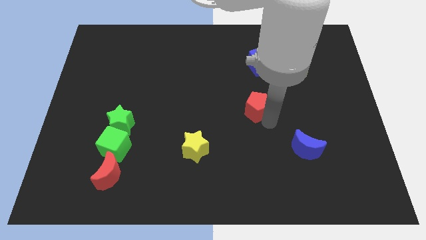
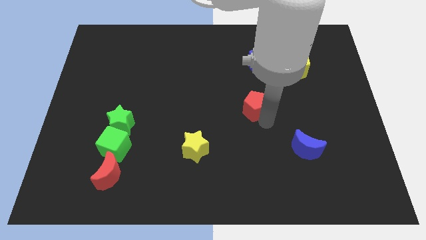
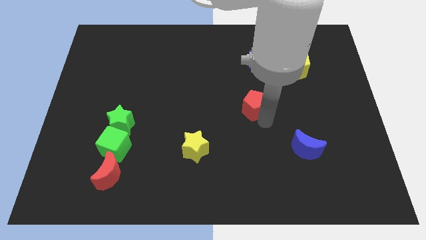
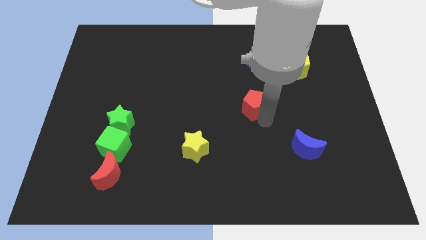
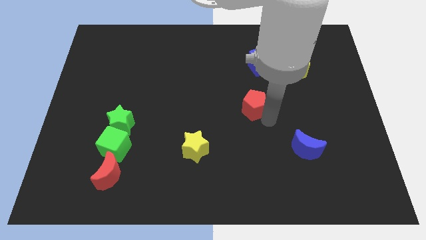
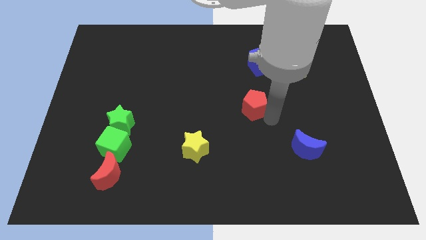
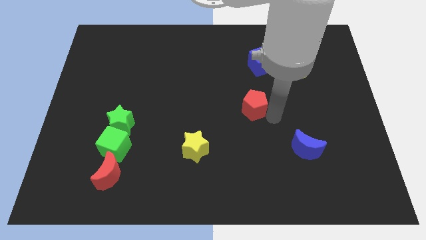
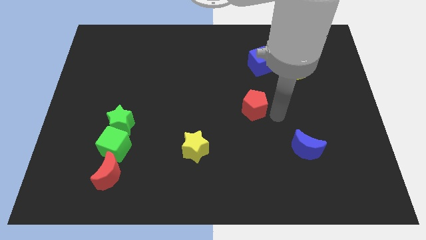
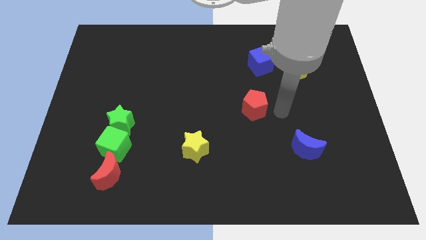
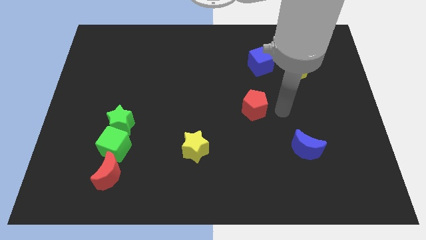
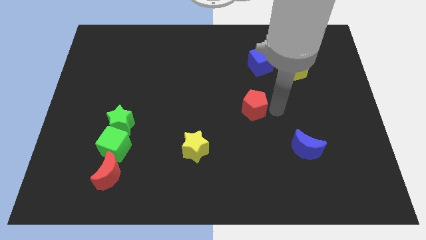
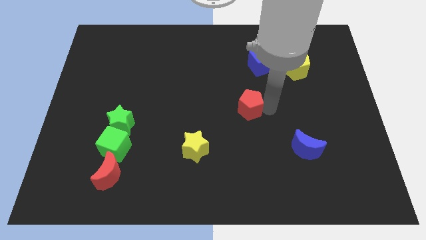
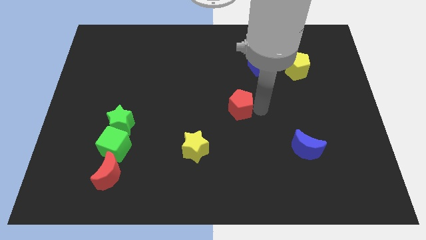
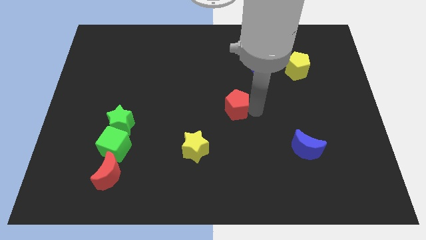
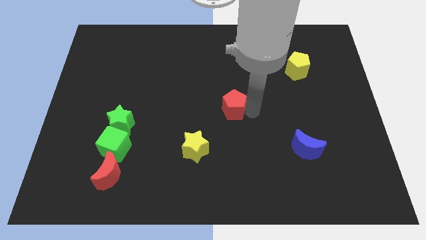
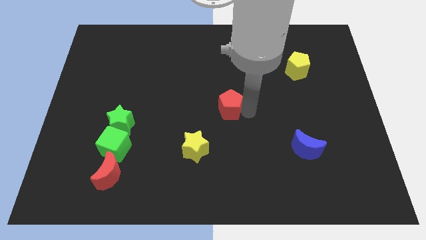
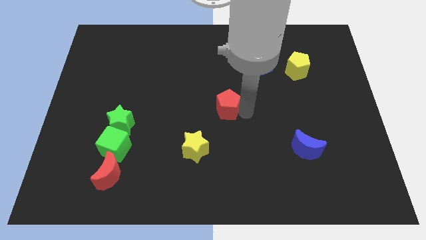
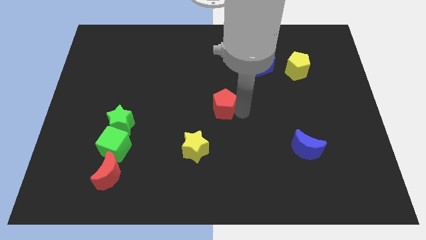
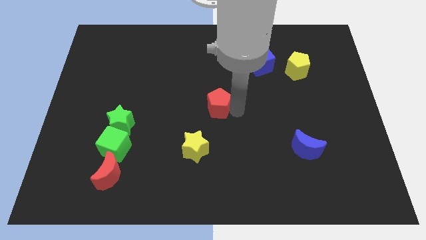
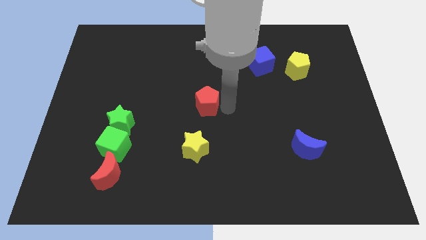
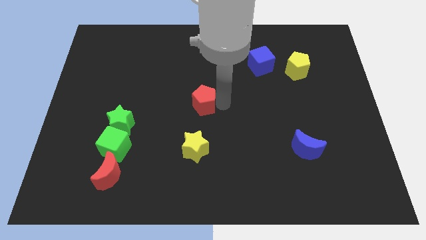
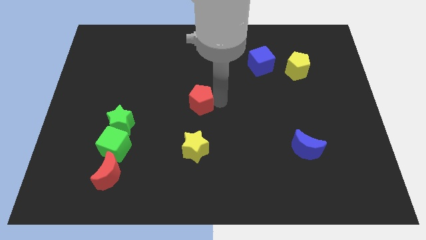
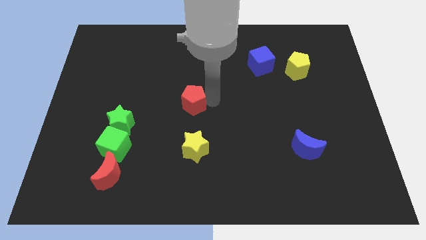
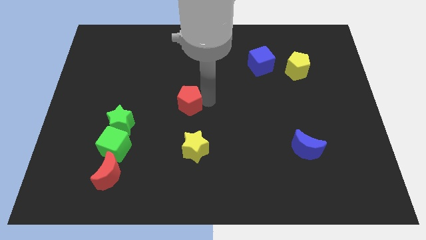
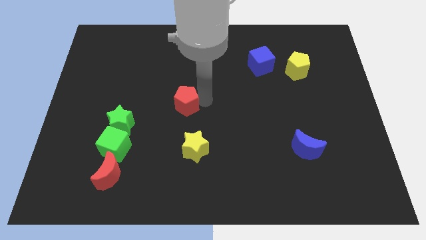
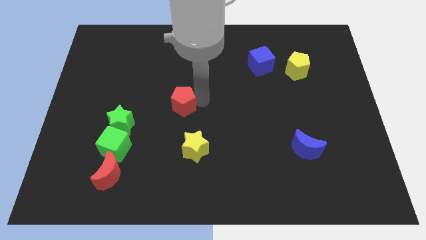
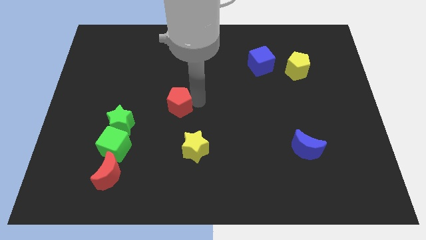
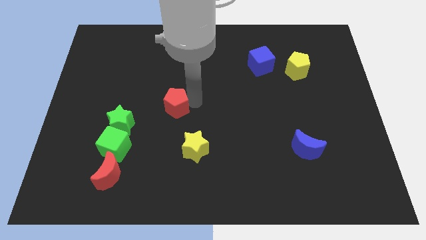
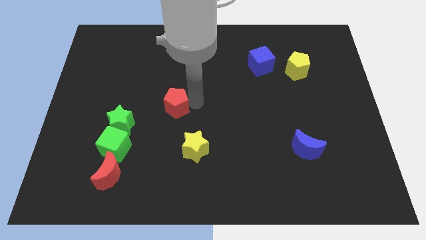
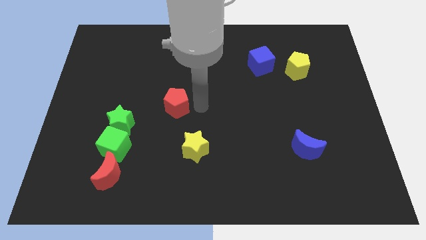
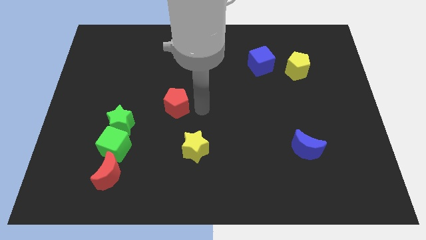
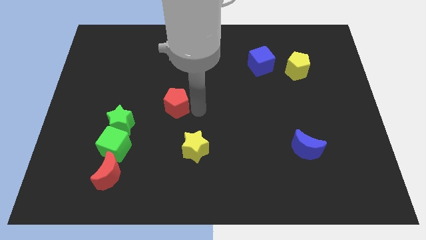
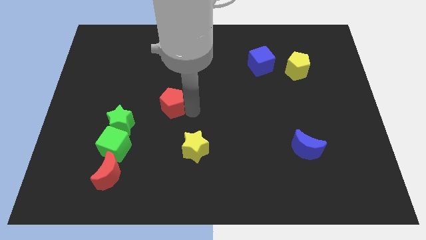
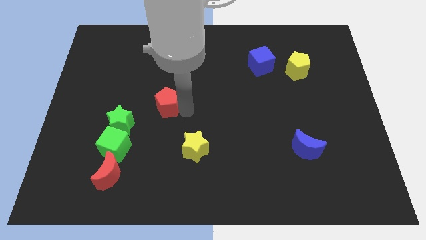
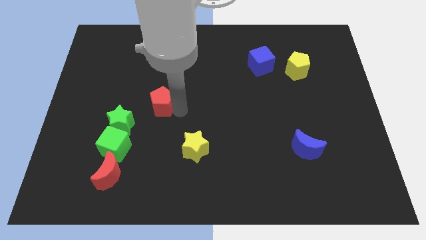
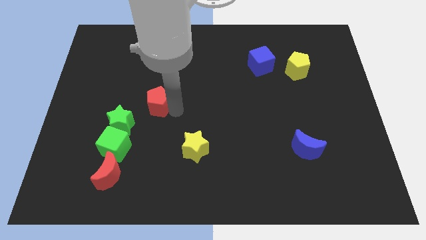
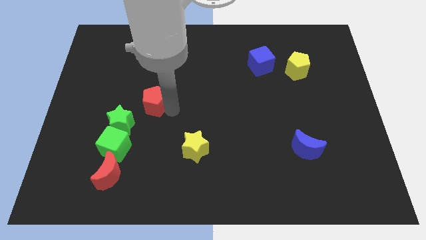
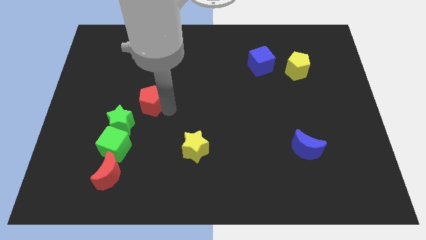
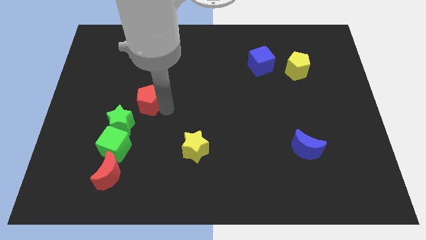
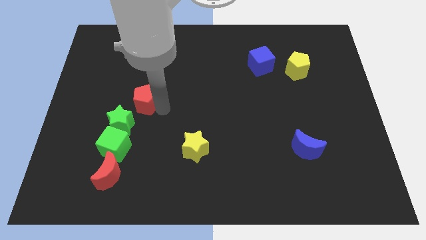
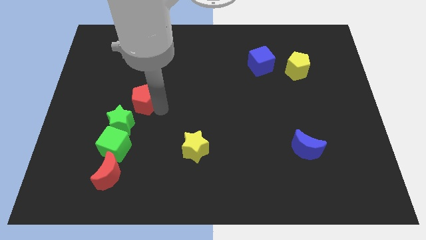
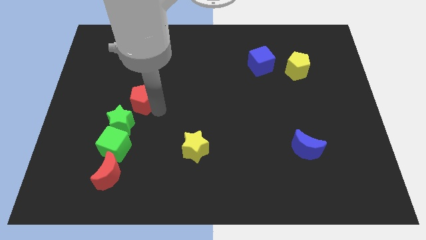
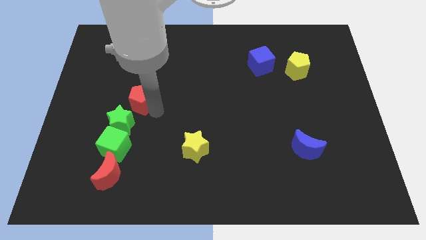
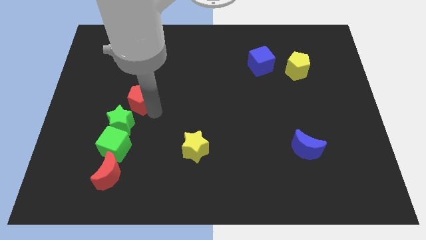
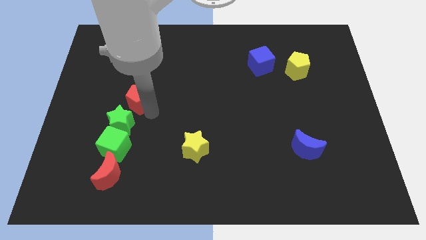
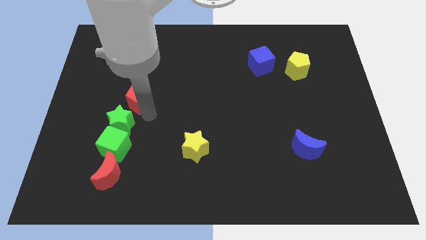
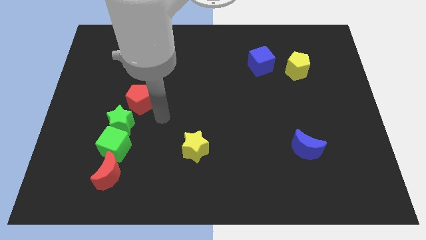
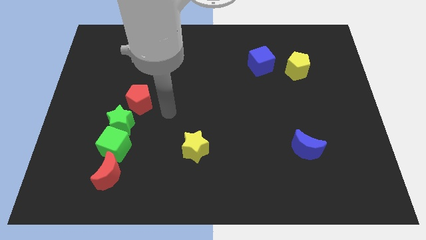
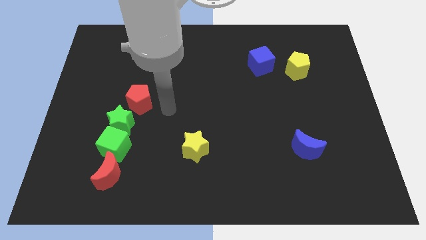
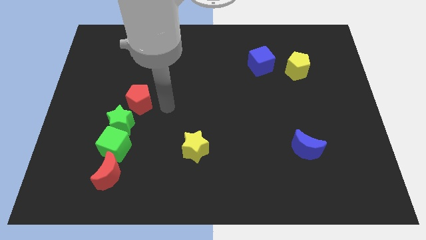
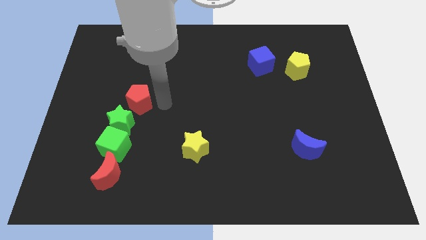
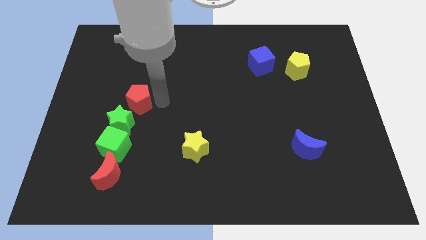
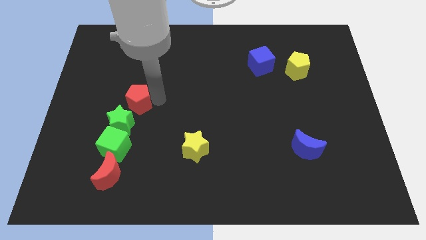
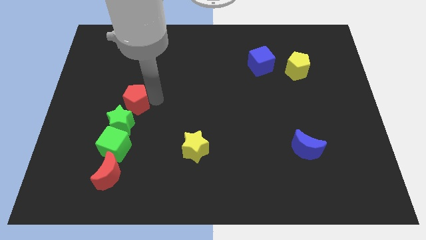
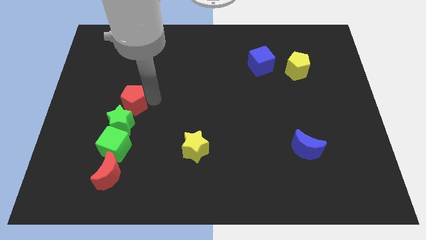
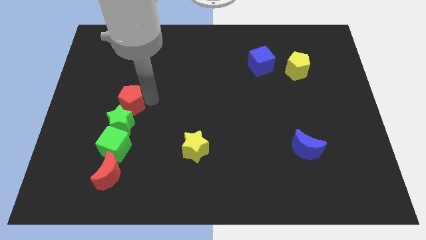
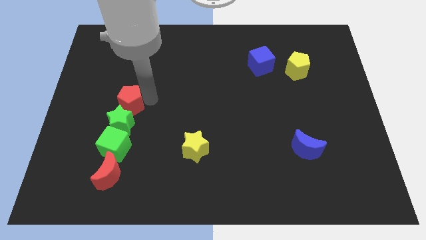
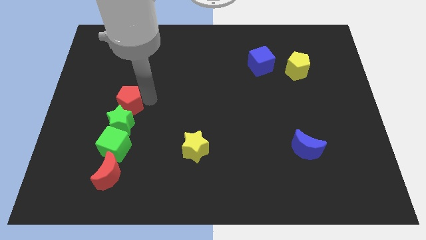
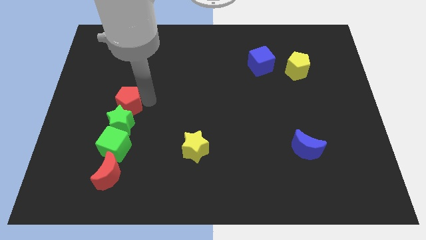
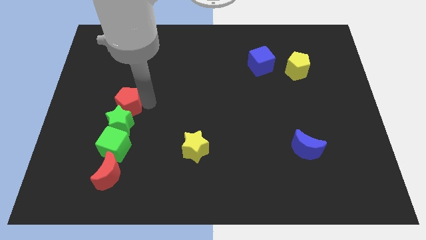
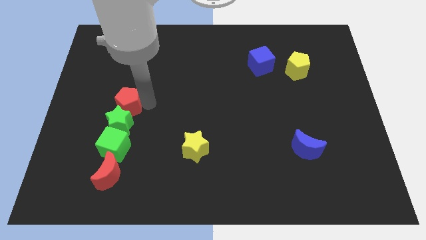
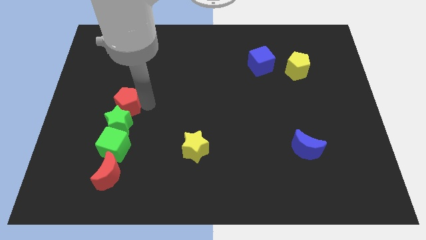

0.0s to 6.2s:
move the red pentagon to the top of the green star

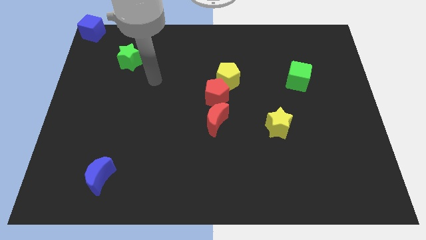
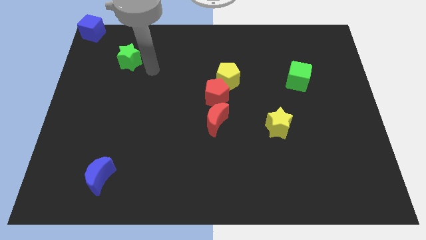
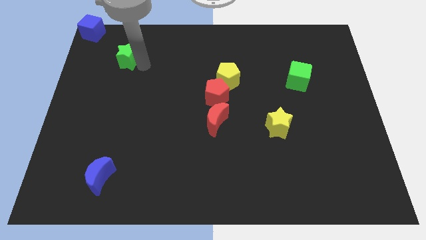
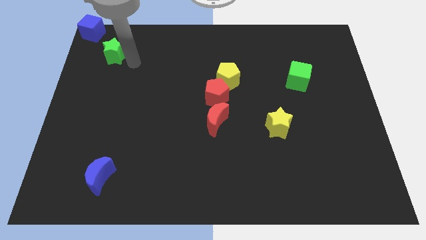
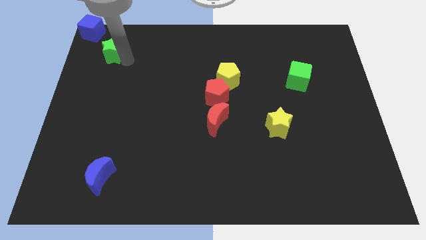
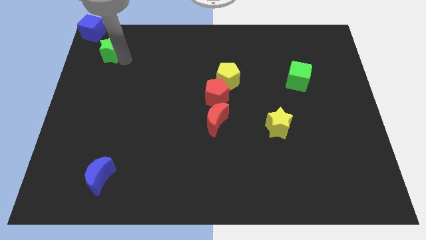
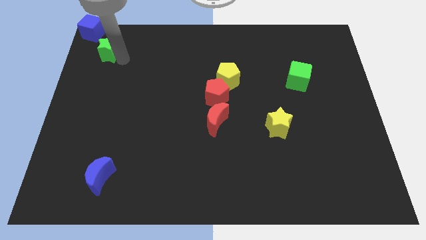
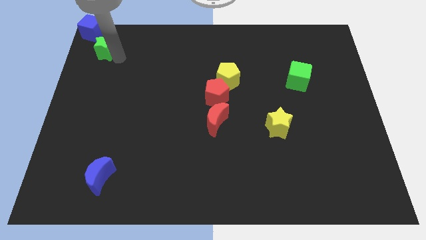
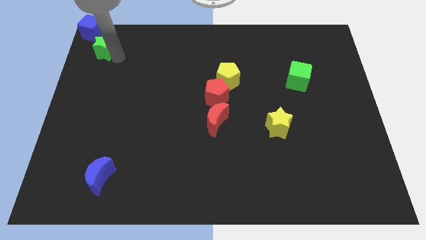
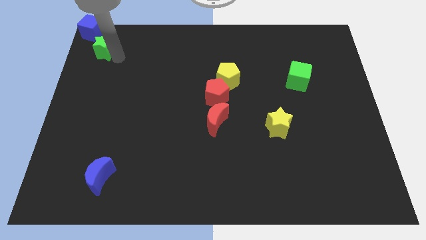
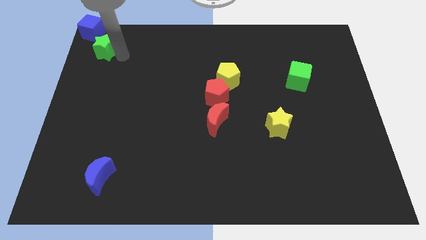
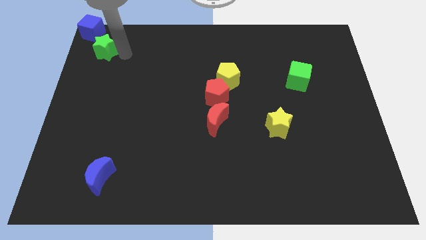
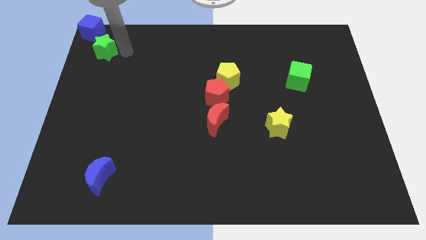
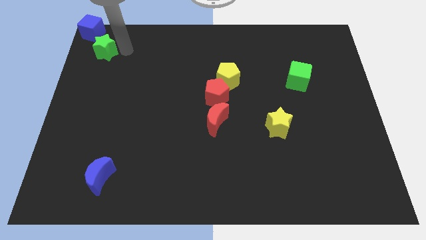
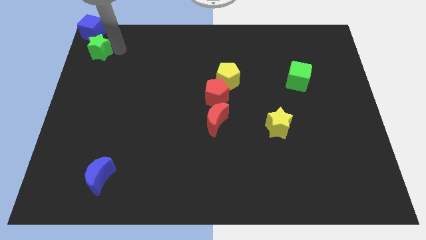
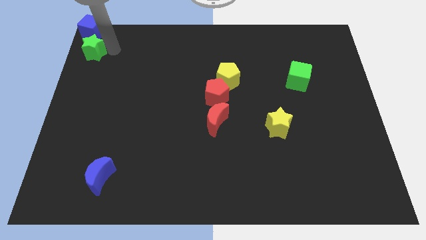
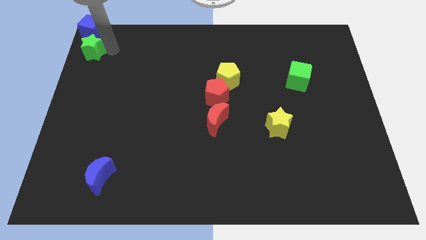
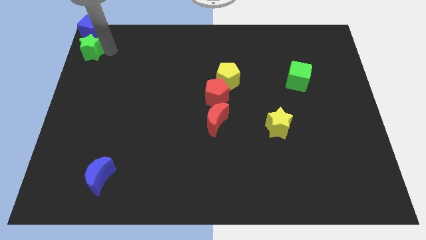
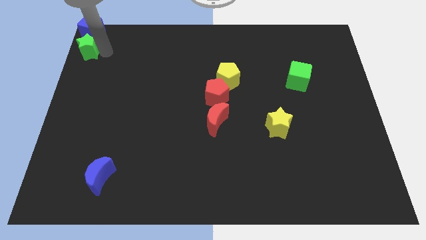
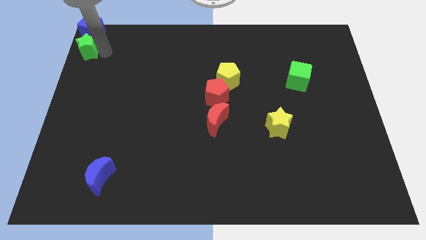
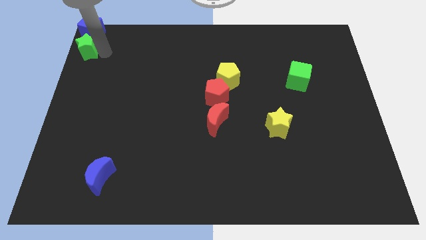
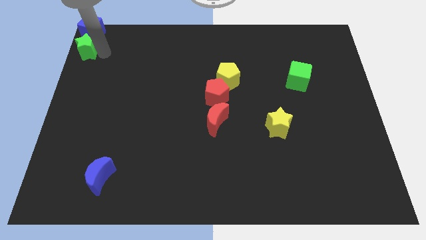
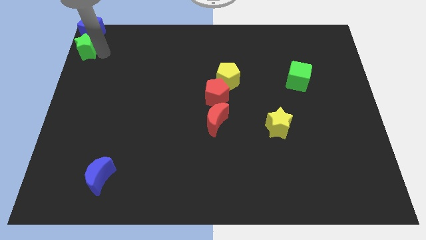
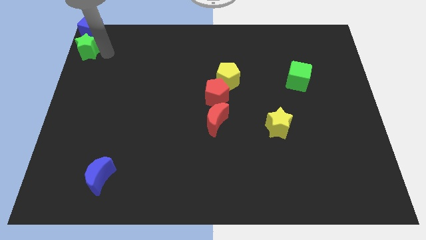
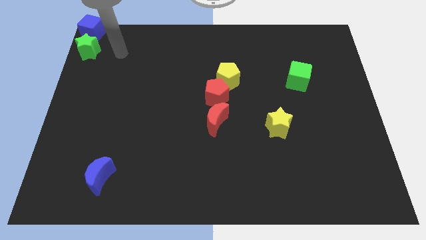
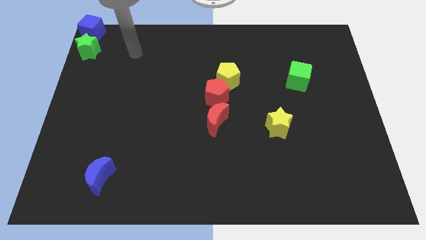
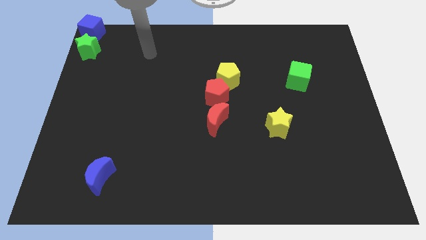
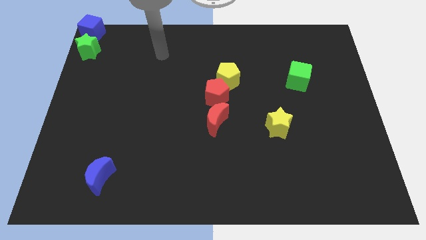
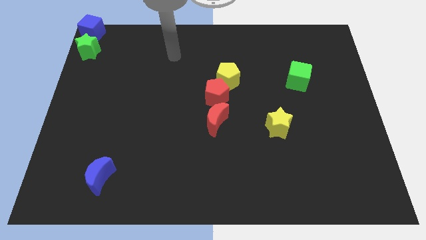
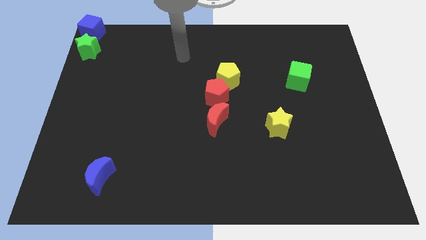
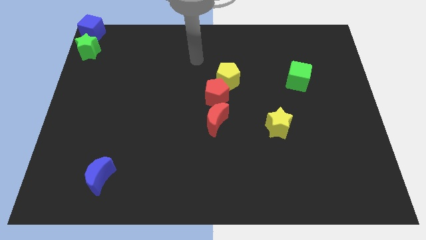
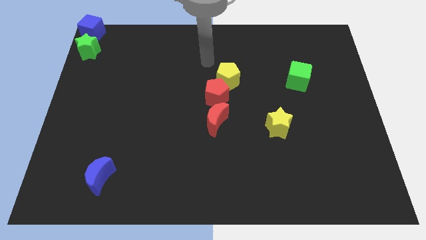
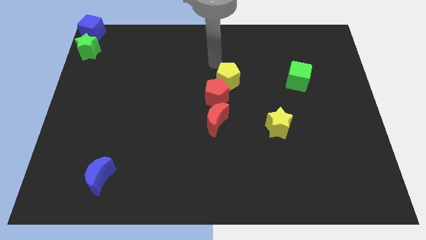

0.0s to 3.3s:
place green star below the blue cube
